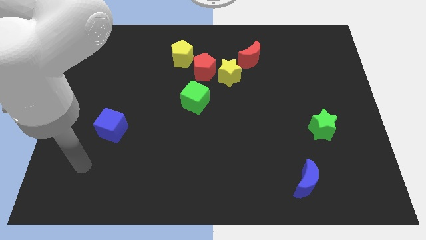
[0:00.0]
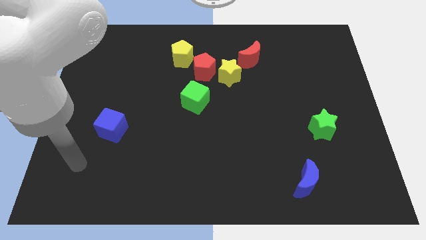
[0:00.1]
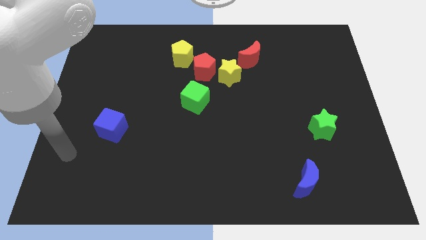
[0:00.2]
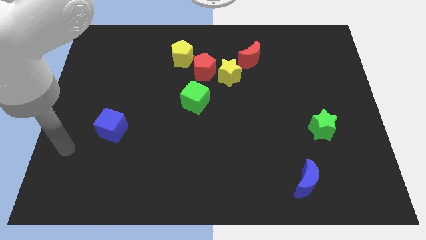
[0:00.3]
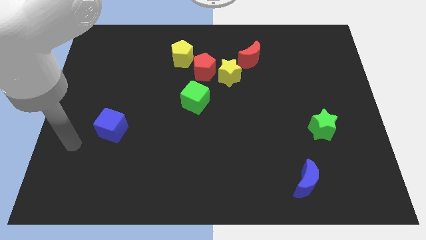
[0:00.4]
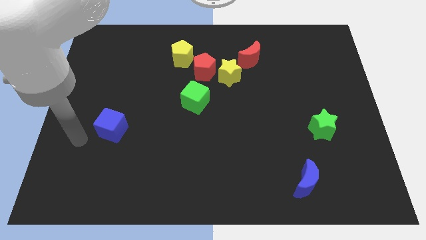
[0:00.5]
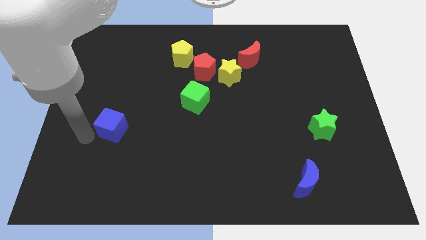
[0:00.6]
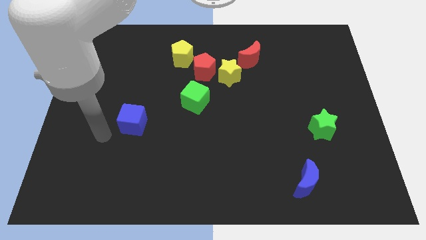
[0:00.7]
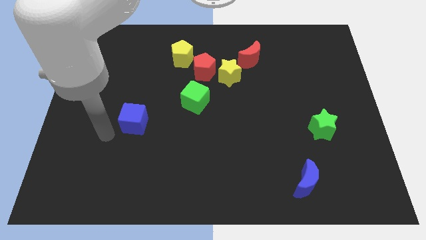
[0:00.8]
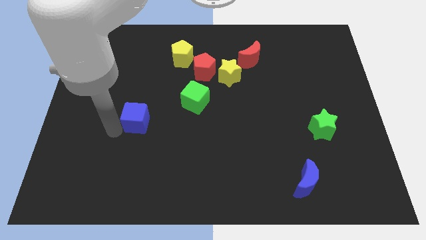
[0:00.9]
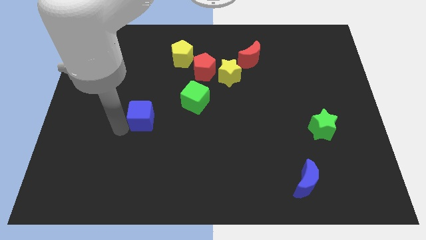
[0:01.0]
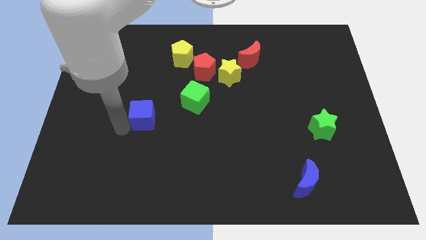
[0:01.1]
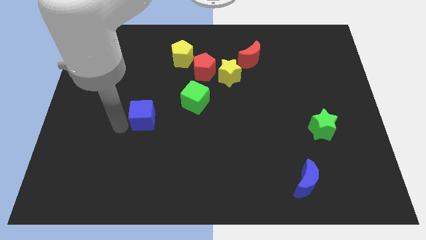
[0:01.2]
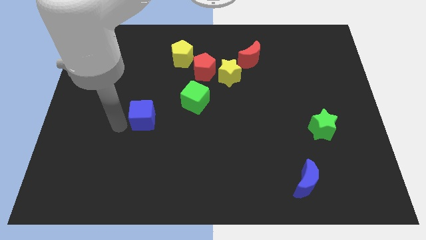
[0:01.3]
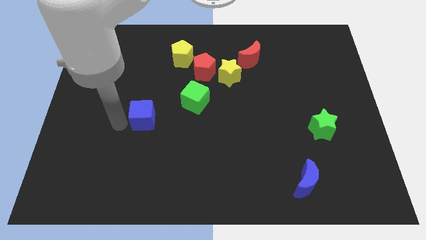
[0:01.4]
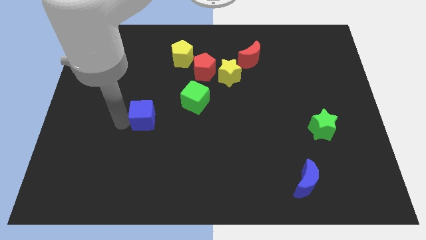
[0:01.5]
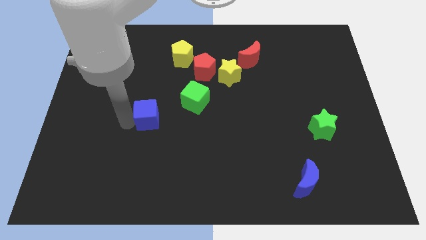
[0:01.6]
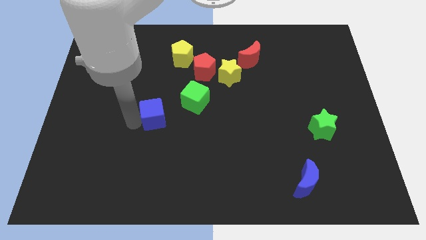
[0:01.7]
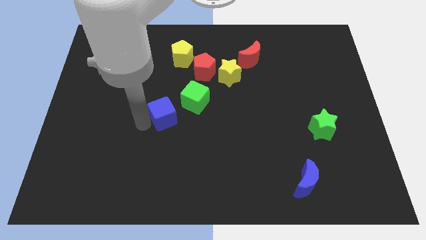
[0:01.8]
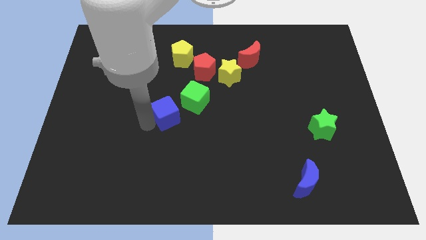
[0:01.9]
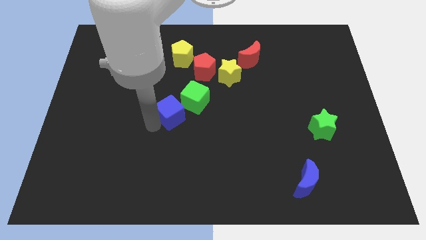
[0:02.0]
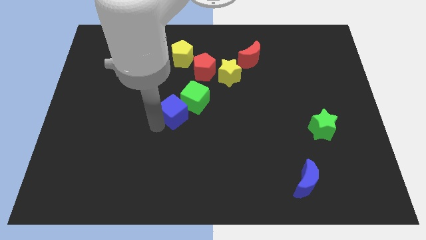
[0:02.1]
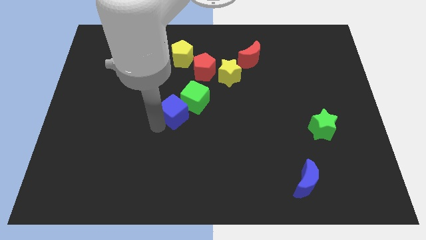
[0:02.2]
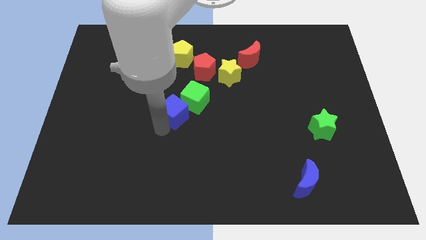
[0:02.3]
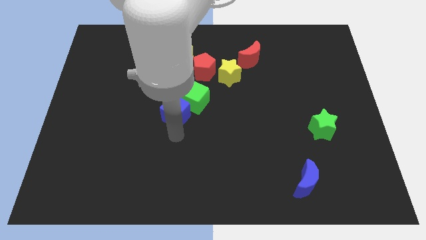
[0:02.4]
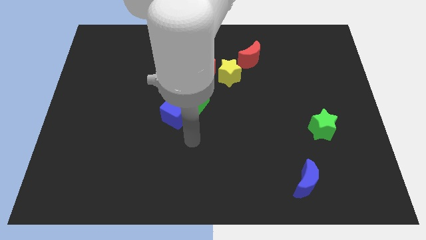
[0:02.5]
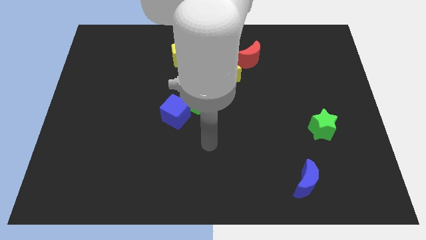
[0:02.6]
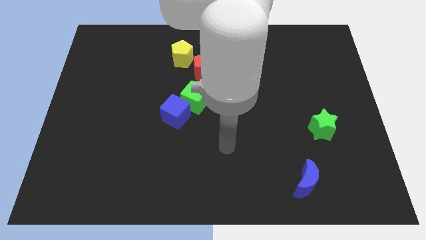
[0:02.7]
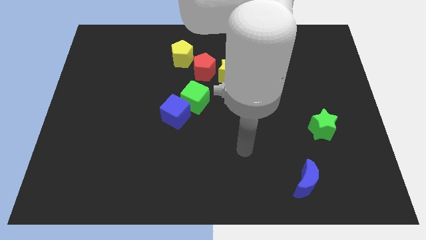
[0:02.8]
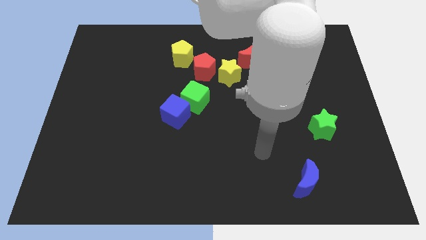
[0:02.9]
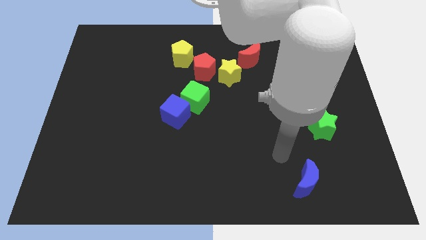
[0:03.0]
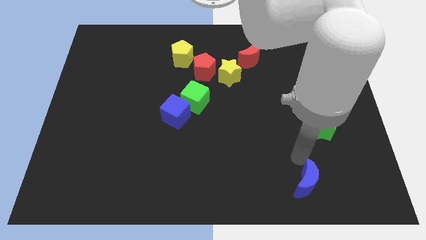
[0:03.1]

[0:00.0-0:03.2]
push blue cube at bottom left to green cube

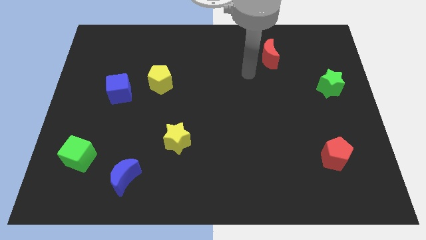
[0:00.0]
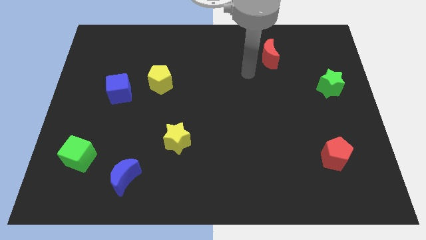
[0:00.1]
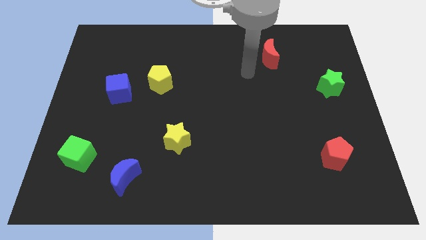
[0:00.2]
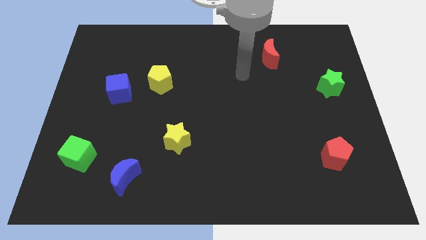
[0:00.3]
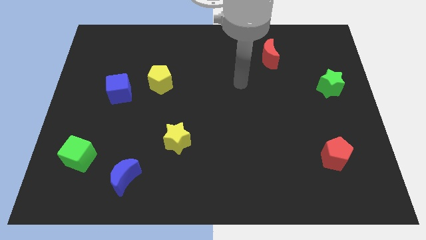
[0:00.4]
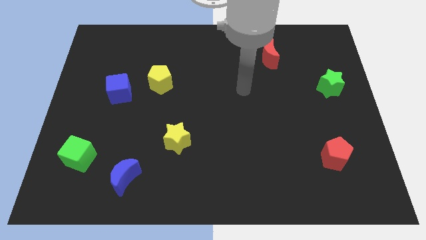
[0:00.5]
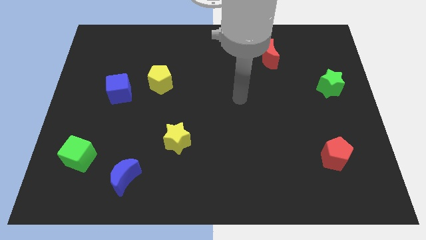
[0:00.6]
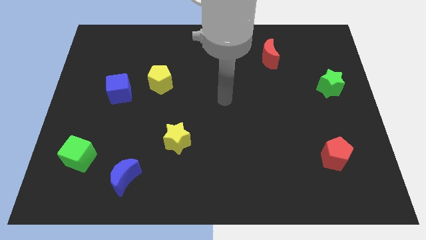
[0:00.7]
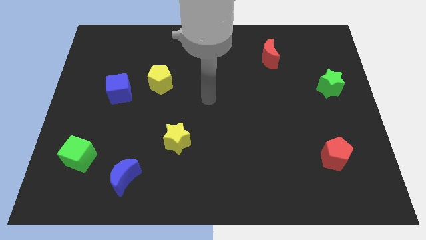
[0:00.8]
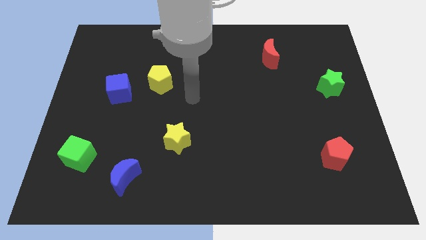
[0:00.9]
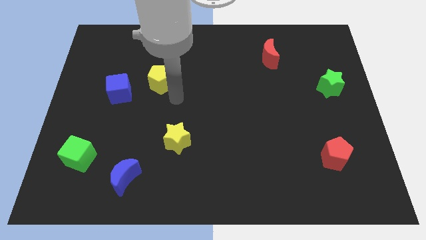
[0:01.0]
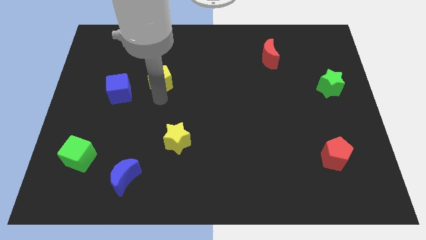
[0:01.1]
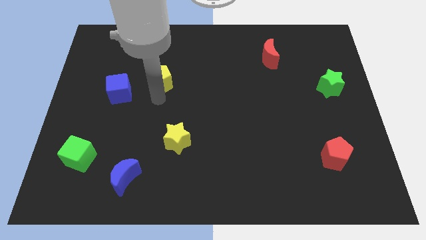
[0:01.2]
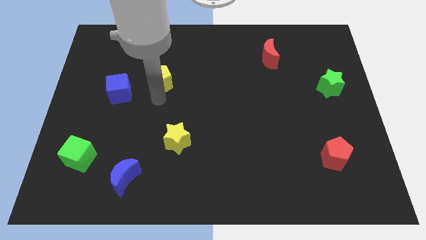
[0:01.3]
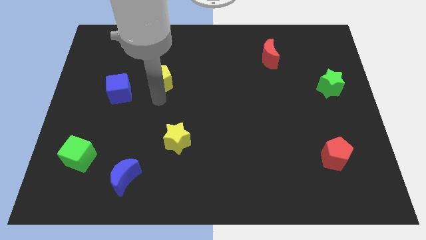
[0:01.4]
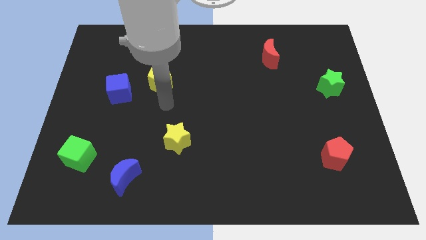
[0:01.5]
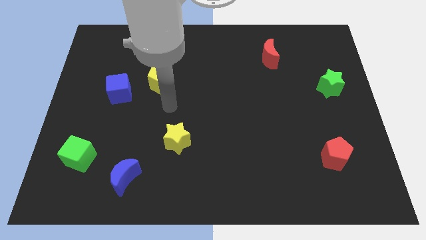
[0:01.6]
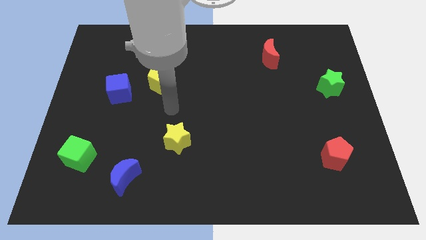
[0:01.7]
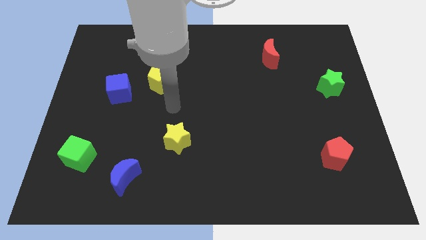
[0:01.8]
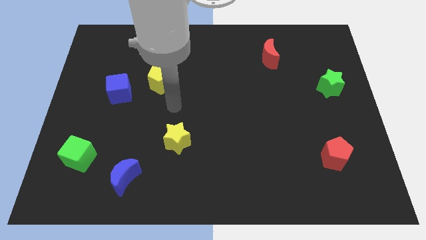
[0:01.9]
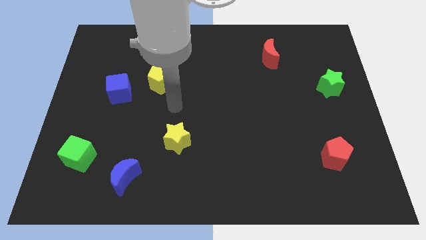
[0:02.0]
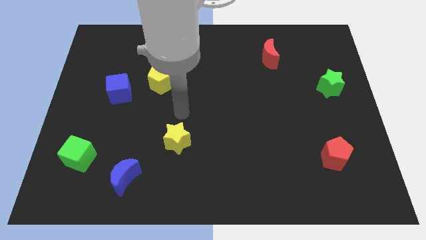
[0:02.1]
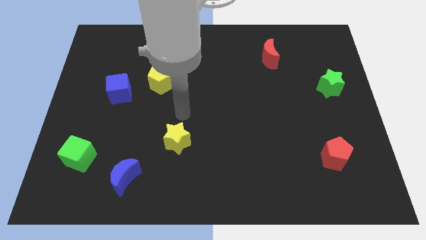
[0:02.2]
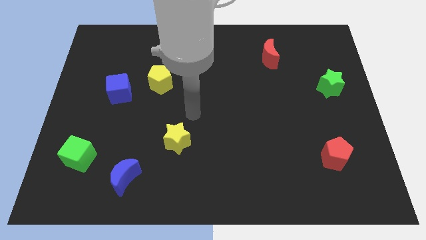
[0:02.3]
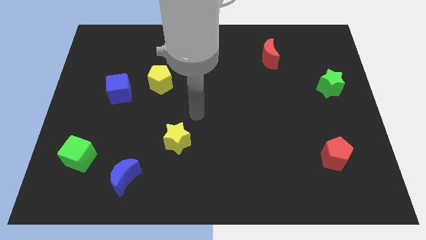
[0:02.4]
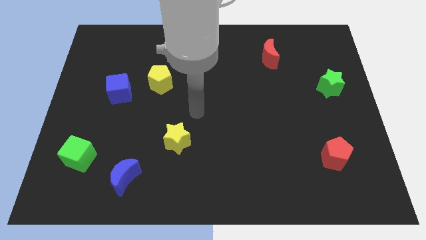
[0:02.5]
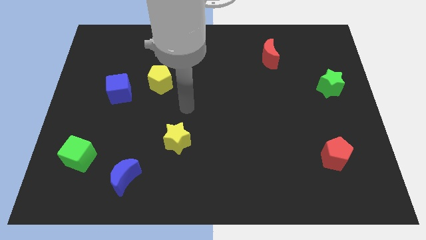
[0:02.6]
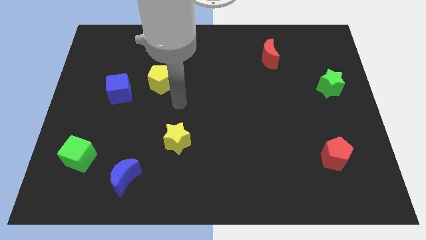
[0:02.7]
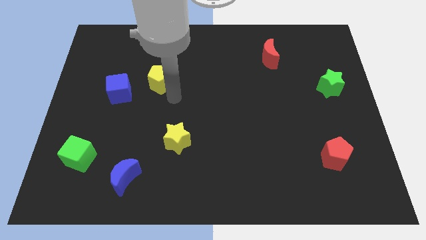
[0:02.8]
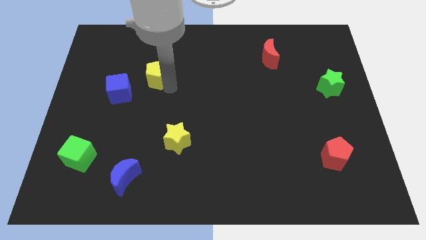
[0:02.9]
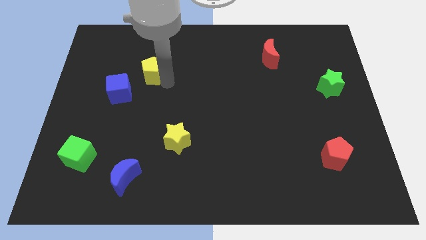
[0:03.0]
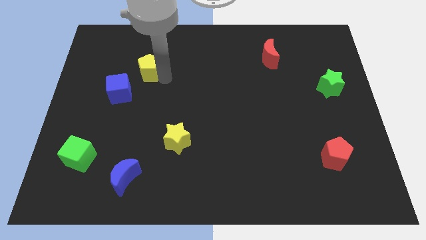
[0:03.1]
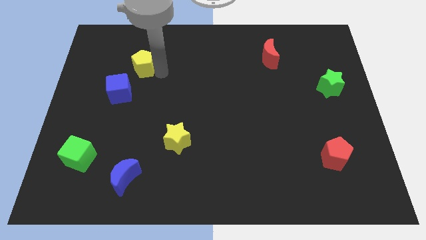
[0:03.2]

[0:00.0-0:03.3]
touch the right side of the yellow pentagon

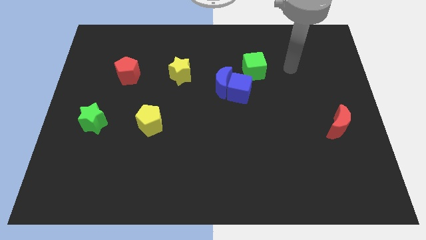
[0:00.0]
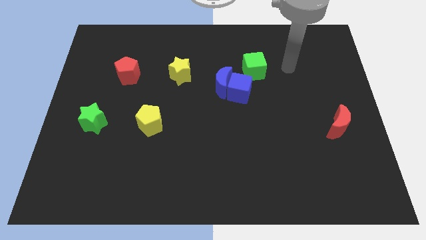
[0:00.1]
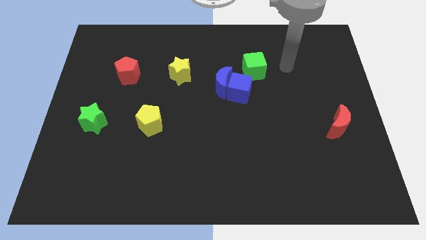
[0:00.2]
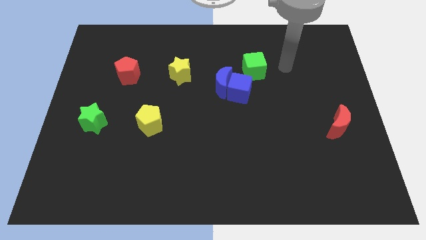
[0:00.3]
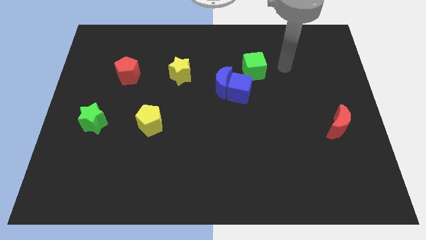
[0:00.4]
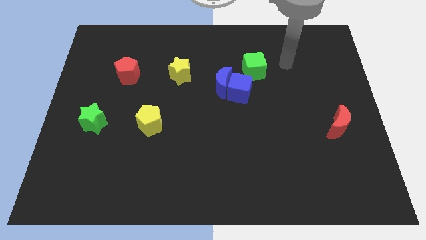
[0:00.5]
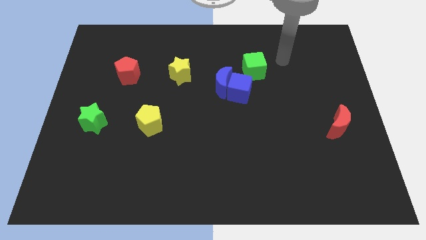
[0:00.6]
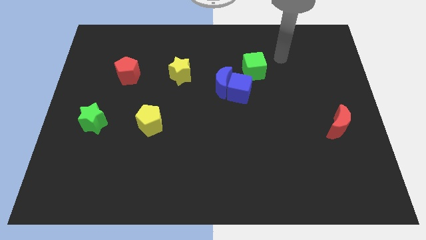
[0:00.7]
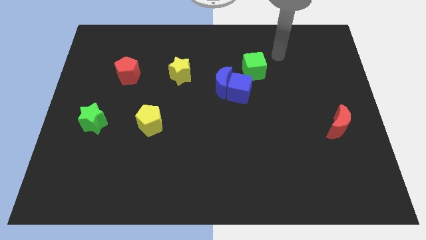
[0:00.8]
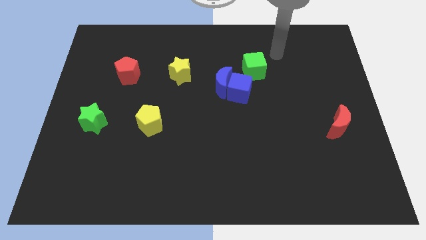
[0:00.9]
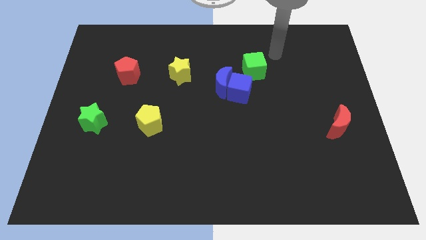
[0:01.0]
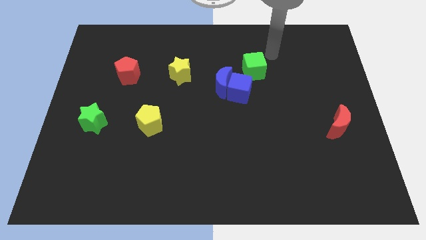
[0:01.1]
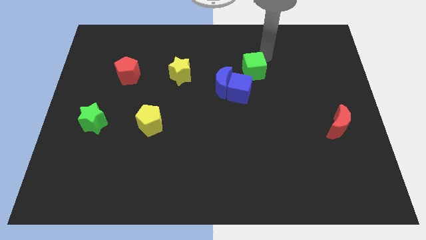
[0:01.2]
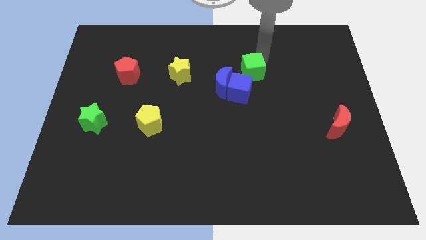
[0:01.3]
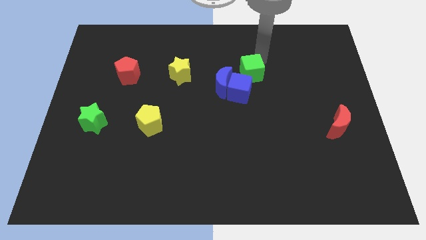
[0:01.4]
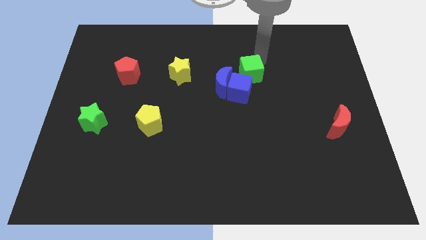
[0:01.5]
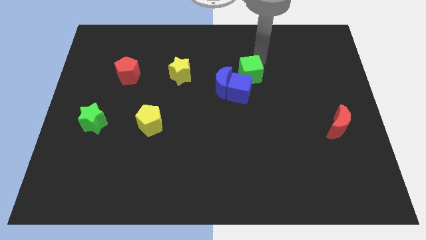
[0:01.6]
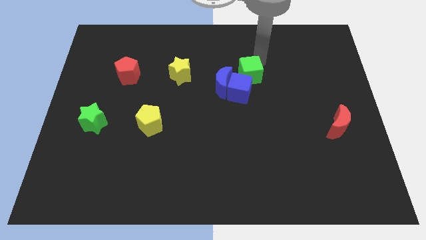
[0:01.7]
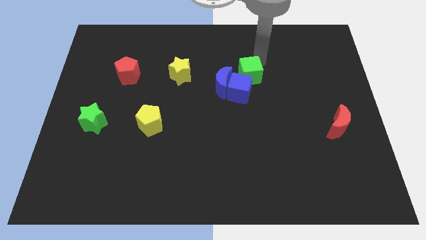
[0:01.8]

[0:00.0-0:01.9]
push the green cube close to the blue cube

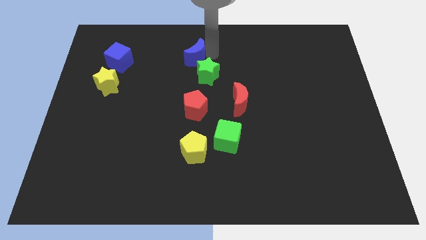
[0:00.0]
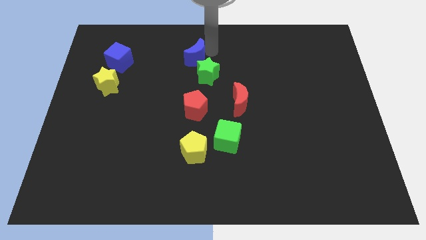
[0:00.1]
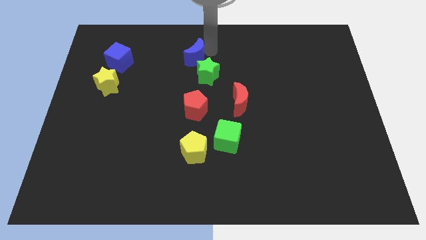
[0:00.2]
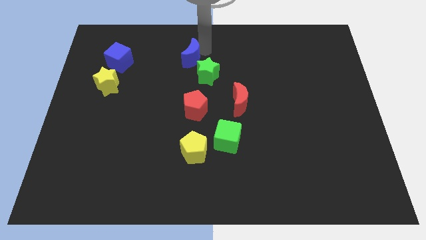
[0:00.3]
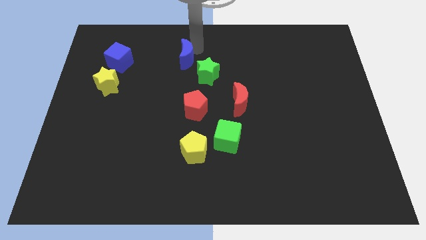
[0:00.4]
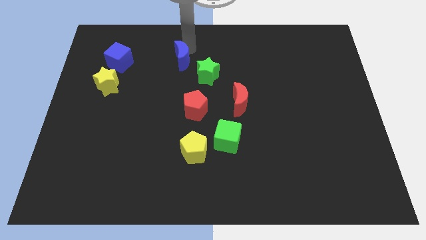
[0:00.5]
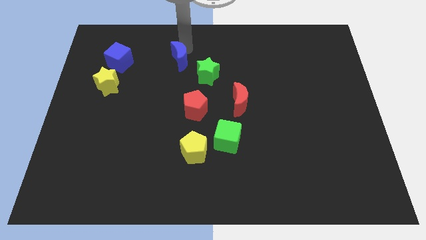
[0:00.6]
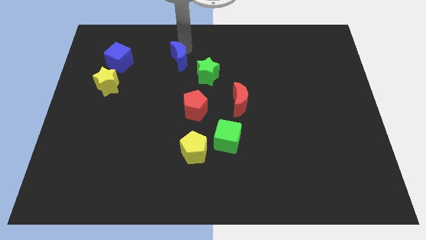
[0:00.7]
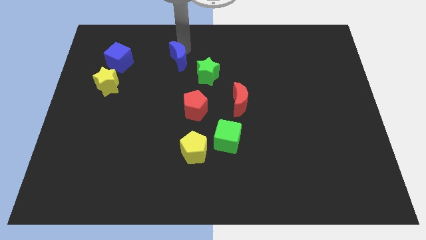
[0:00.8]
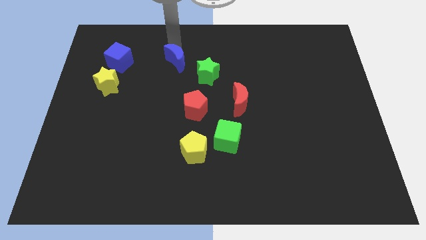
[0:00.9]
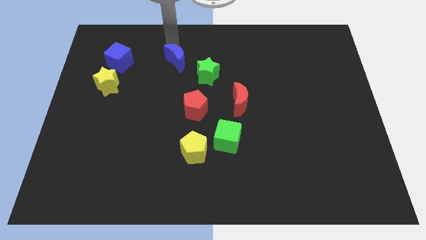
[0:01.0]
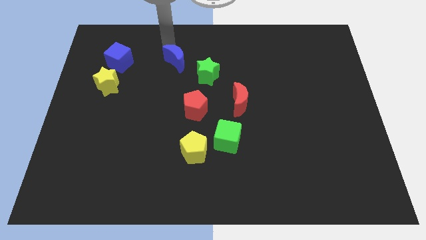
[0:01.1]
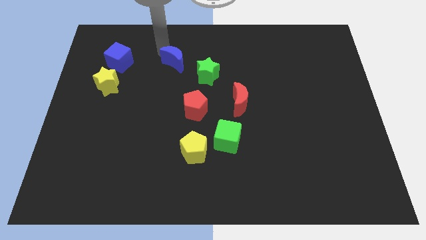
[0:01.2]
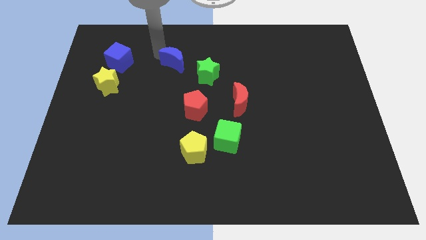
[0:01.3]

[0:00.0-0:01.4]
move blue crescent slightly downwards
